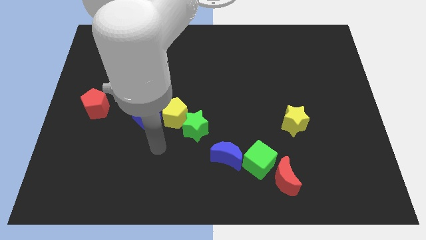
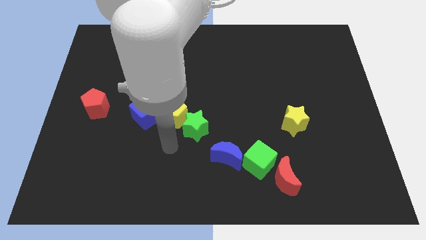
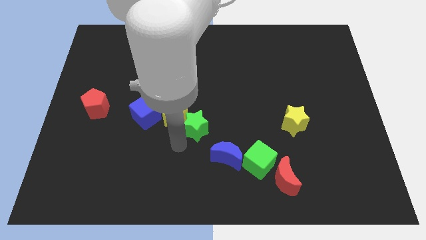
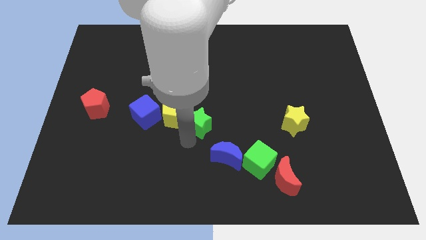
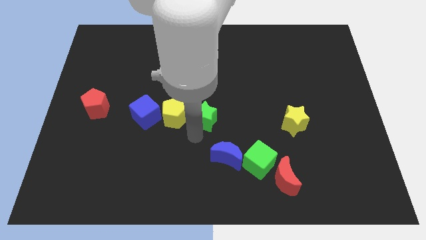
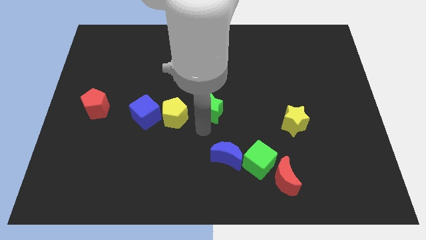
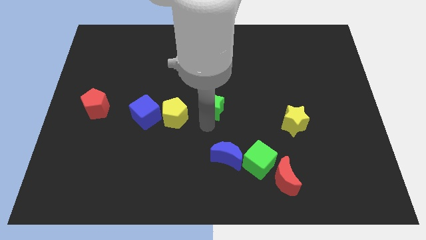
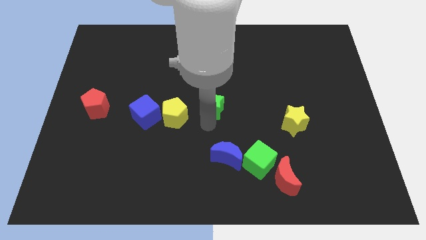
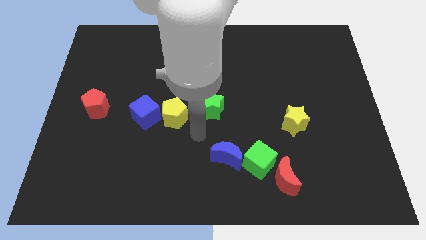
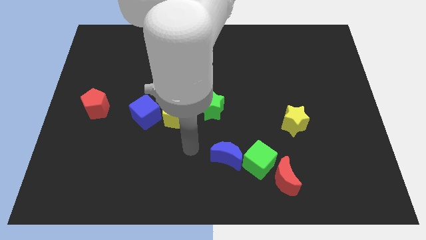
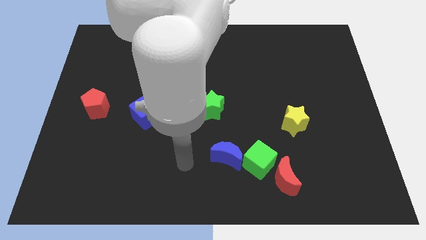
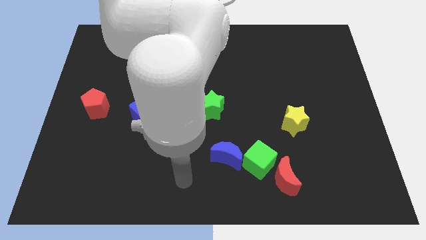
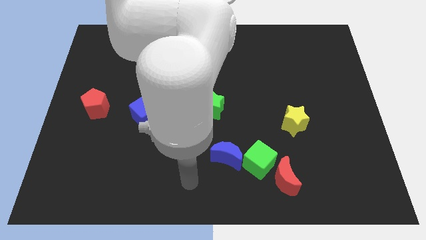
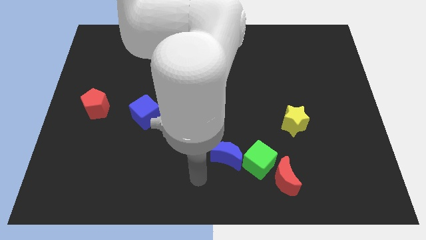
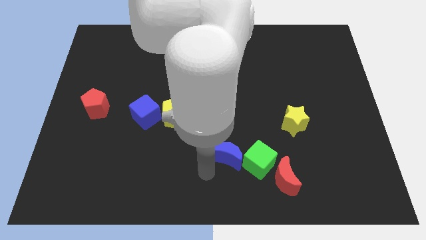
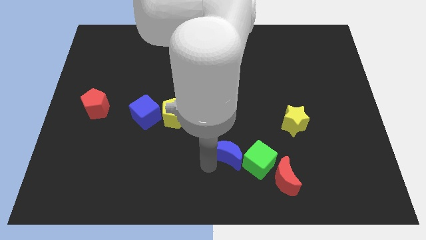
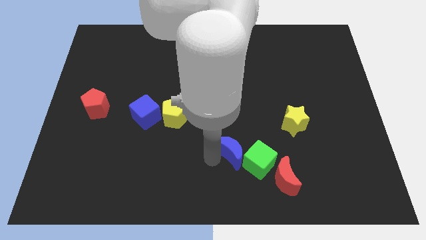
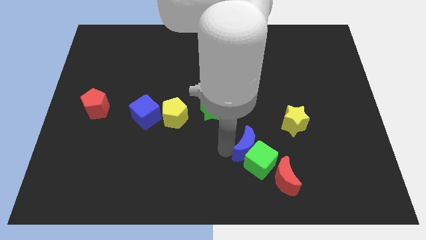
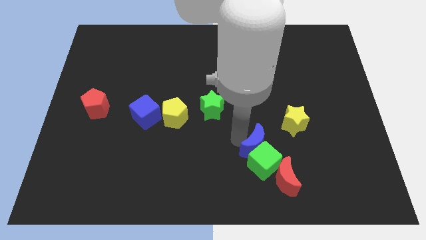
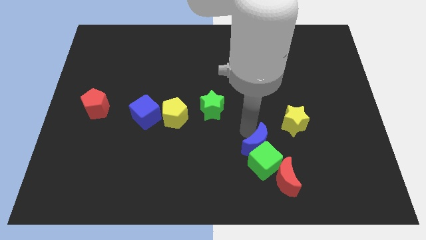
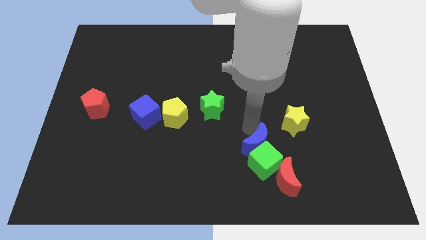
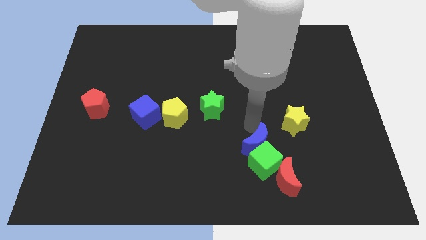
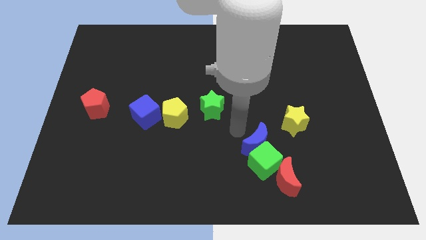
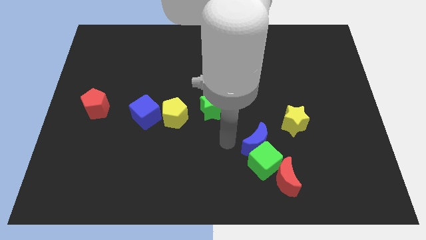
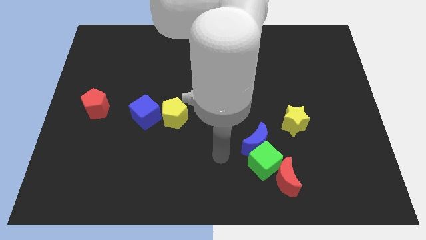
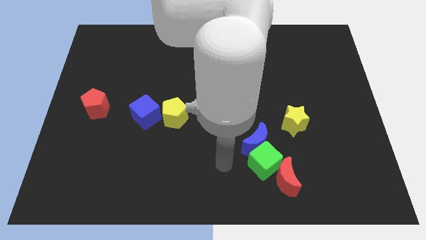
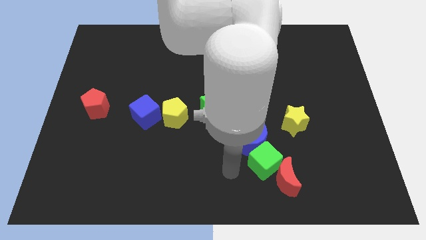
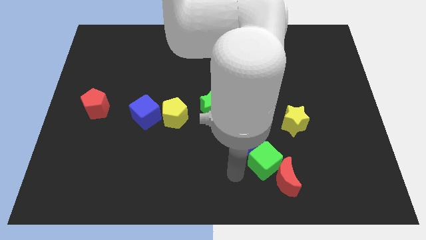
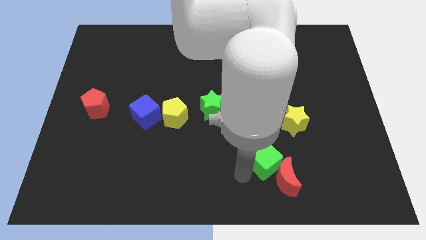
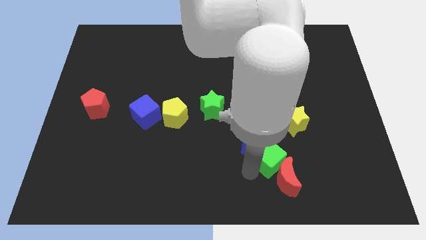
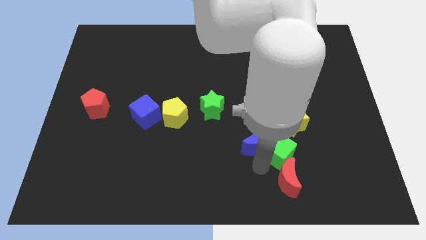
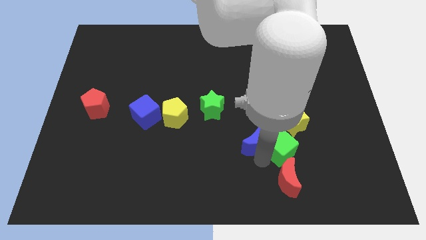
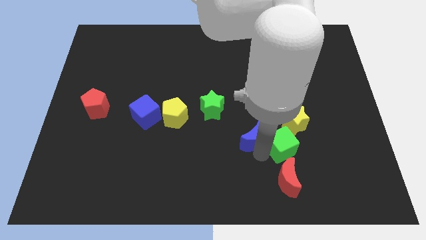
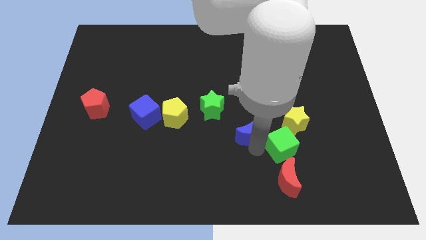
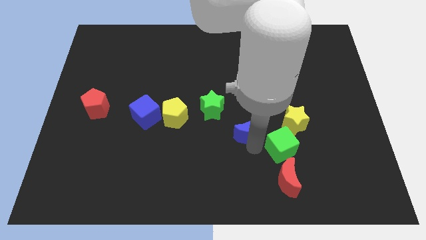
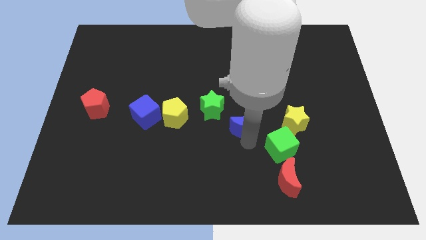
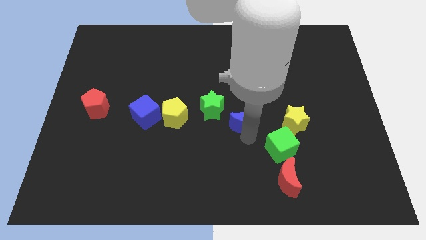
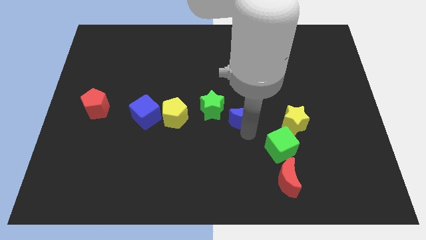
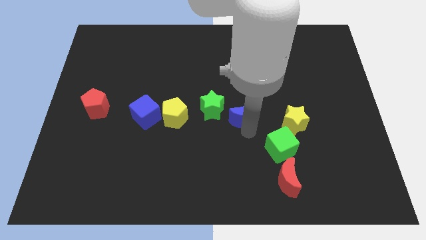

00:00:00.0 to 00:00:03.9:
arrange both the green blocks and blue crescent to form a diagonal line of blocks

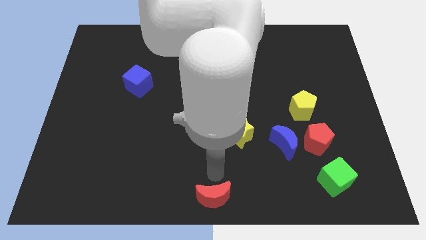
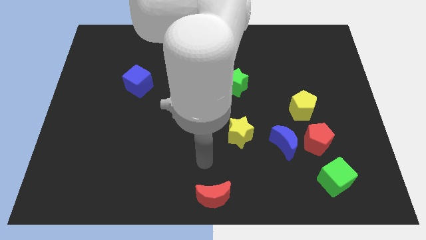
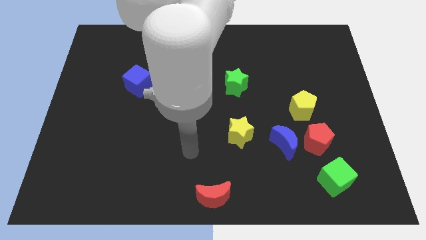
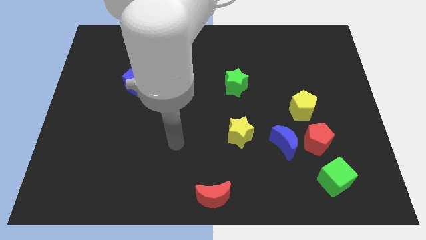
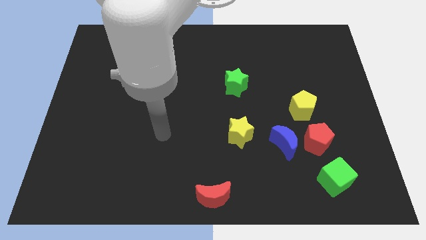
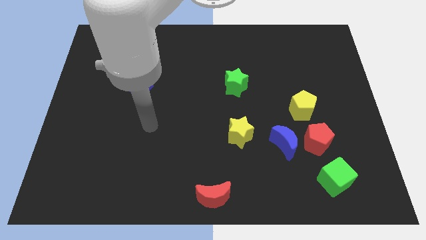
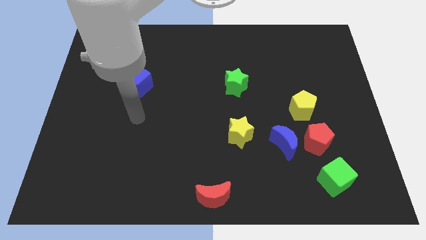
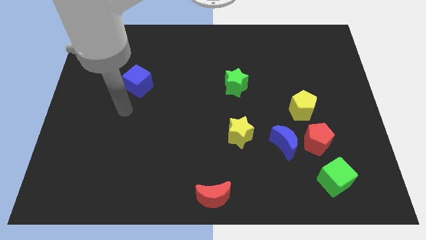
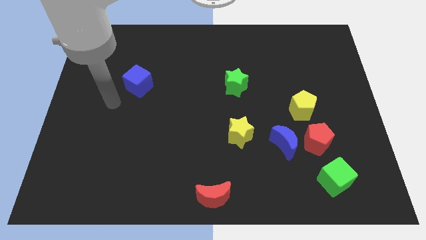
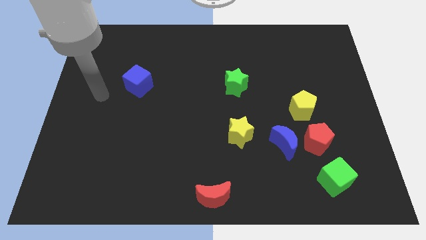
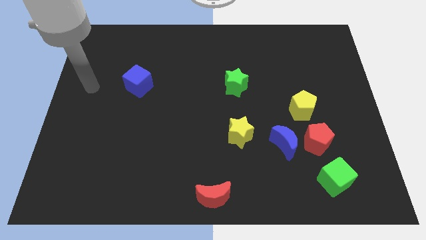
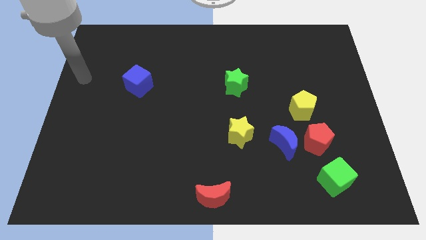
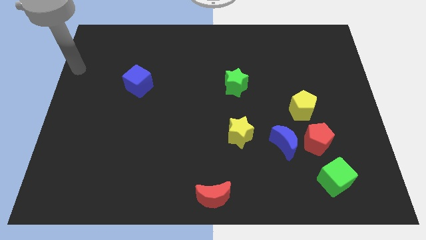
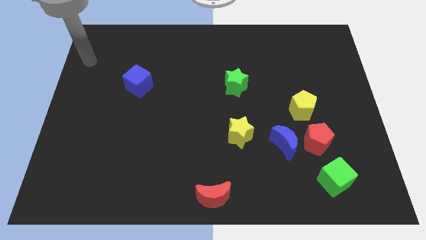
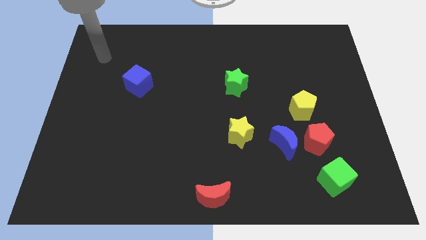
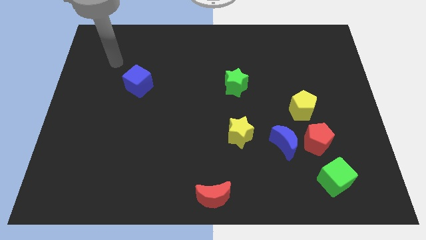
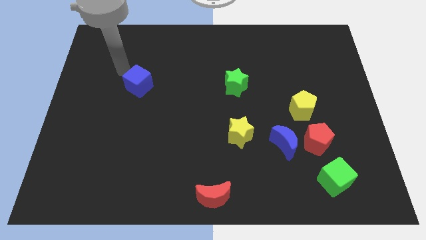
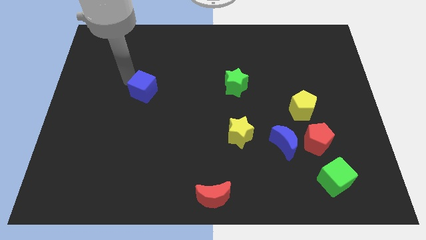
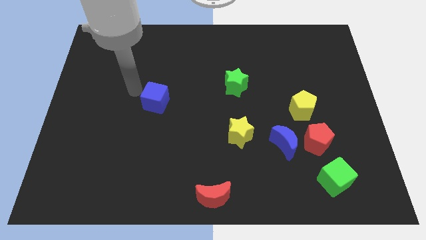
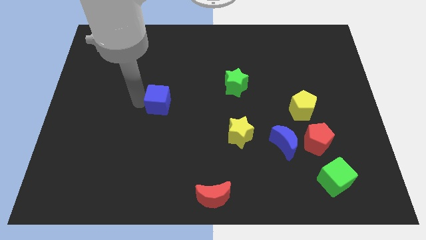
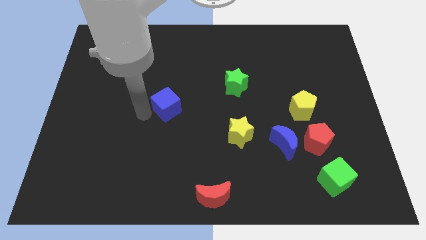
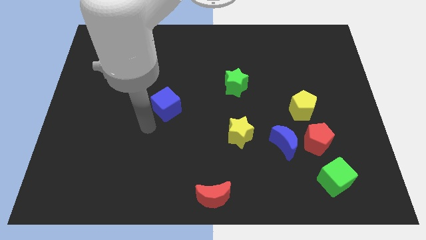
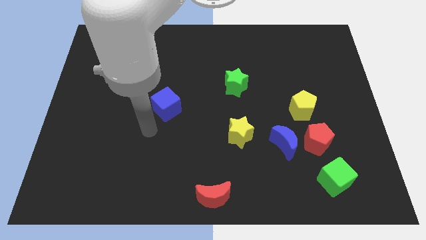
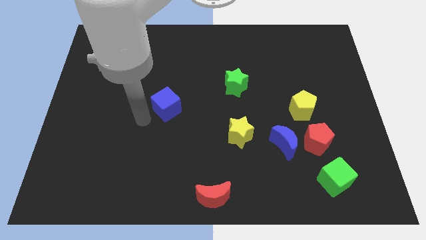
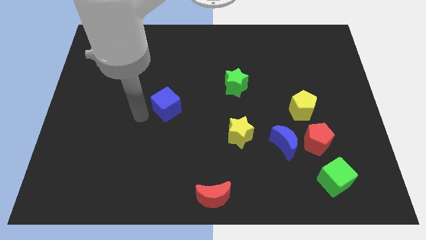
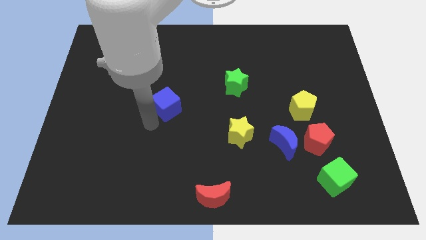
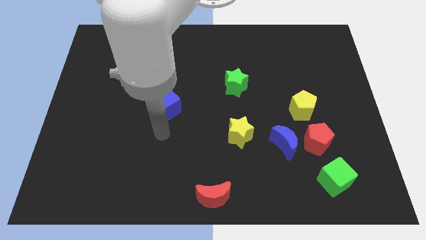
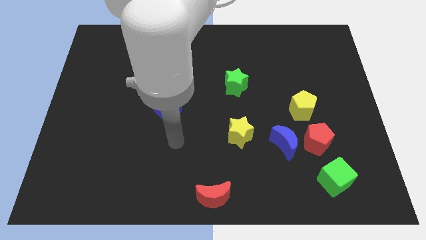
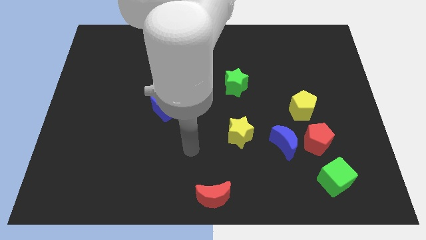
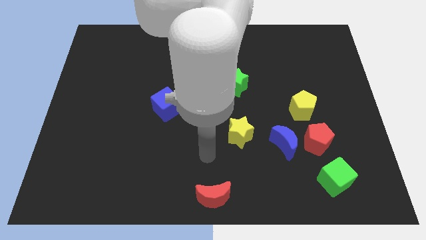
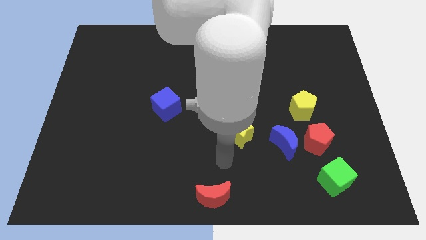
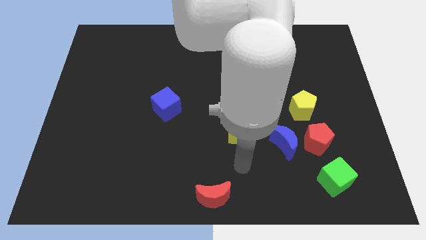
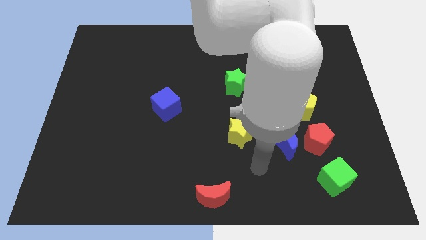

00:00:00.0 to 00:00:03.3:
place the blue cube to the center

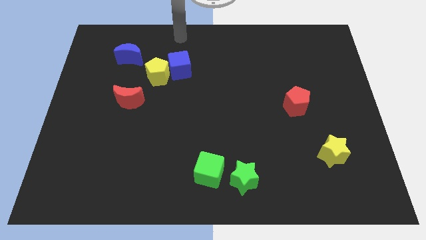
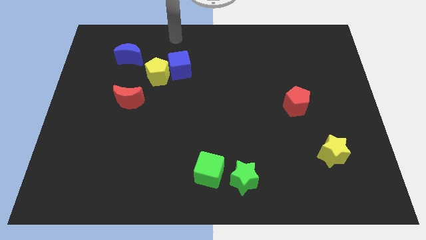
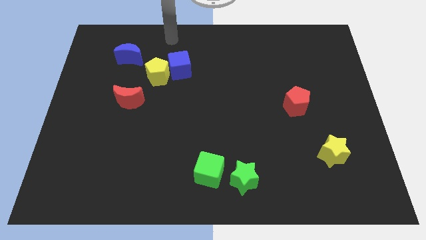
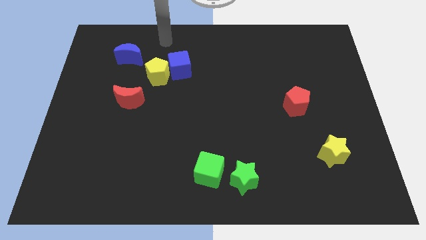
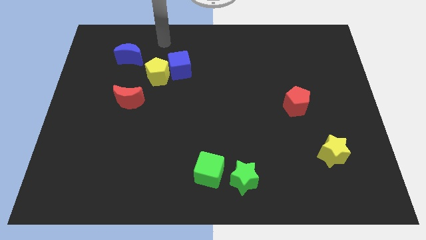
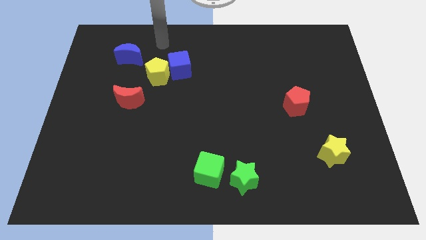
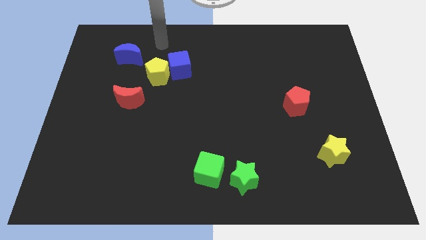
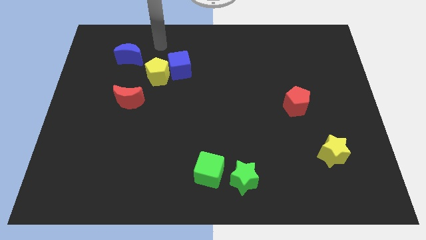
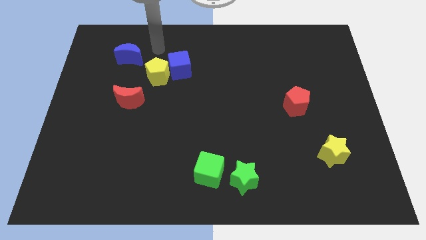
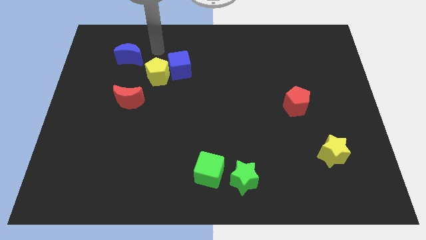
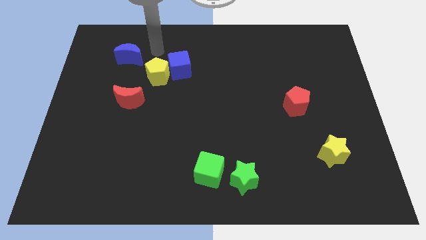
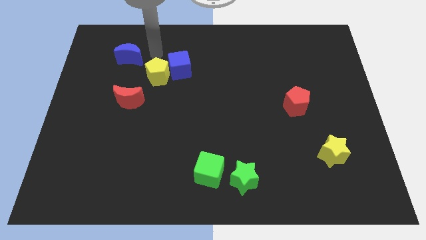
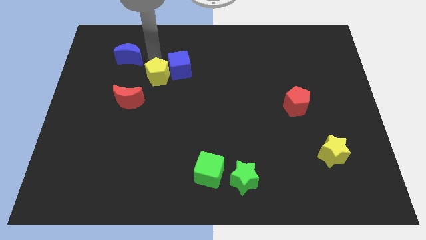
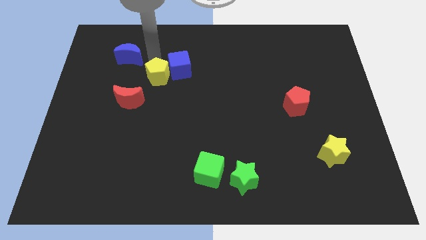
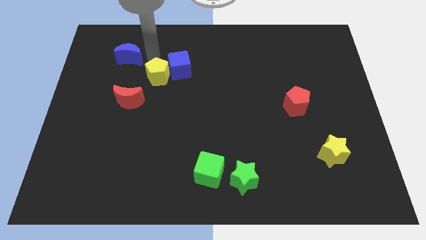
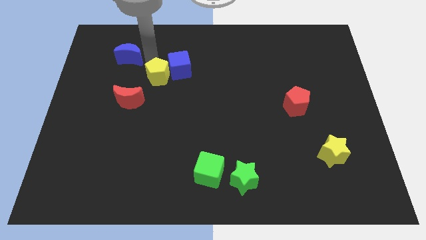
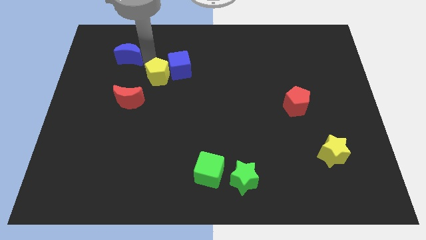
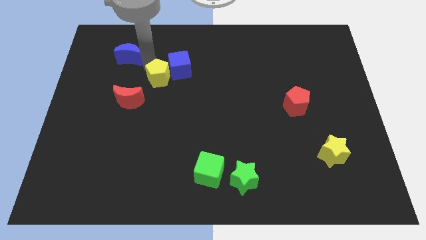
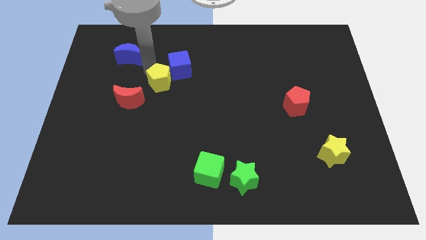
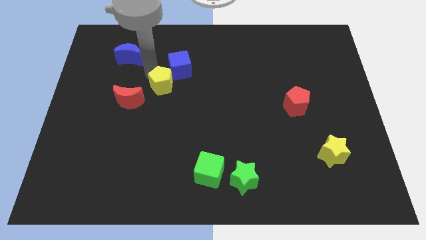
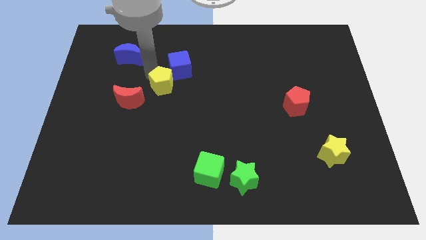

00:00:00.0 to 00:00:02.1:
slightly push the yellow pentagon down
